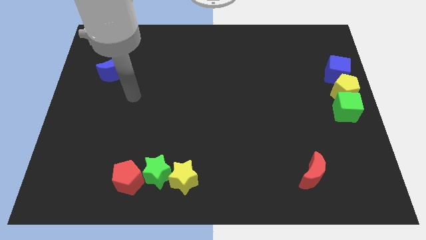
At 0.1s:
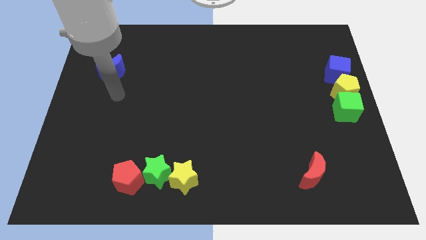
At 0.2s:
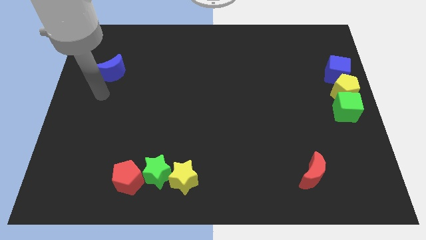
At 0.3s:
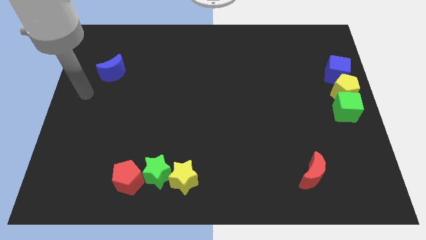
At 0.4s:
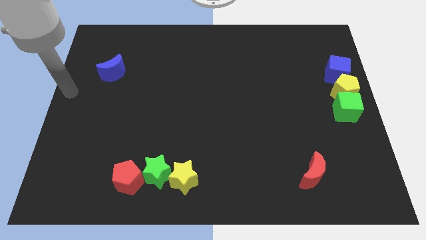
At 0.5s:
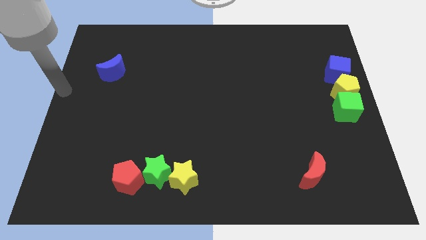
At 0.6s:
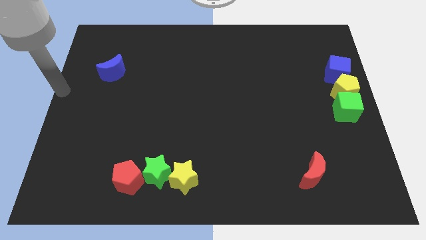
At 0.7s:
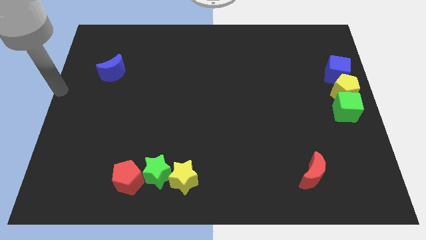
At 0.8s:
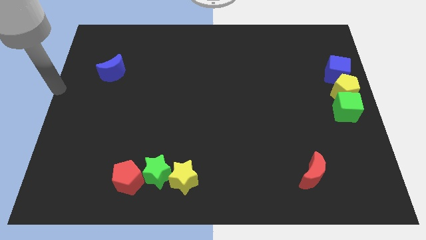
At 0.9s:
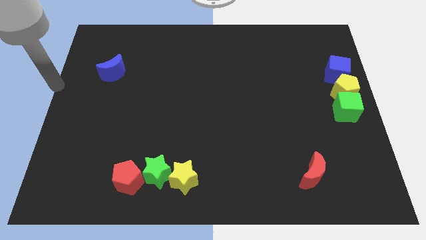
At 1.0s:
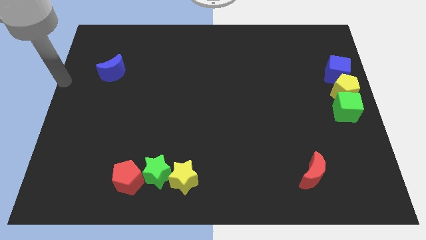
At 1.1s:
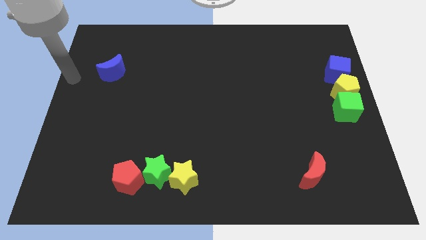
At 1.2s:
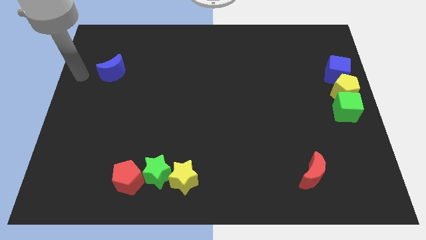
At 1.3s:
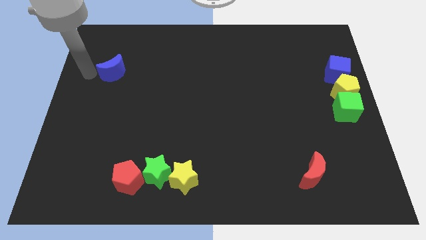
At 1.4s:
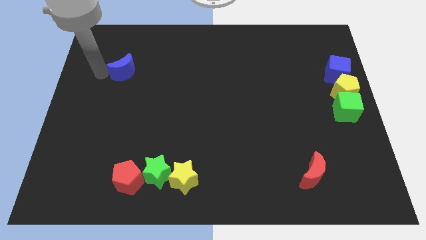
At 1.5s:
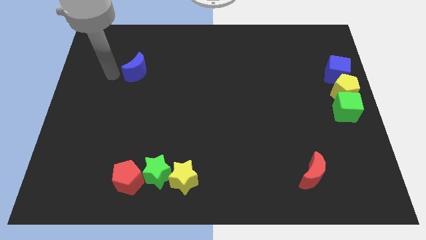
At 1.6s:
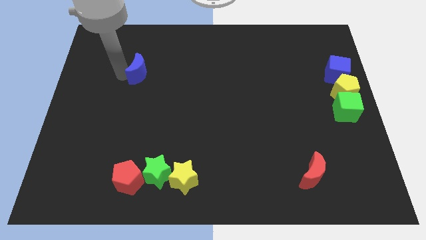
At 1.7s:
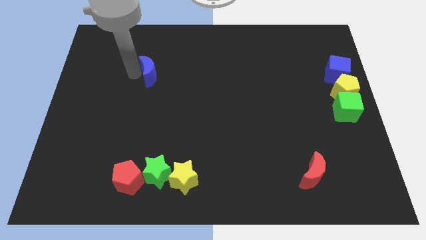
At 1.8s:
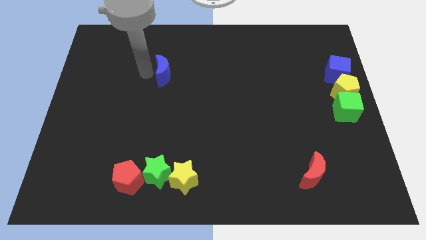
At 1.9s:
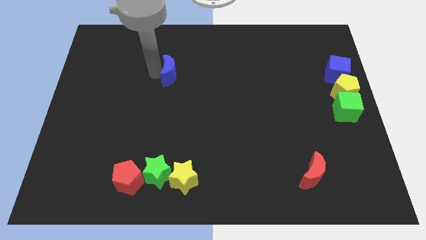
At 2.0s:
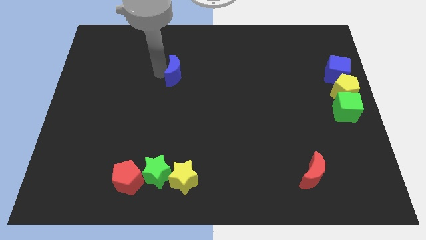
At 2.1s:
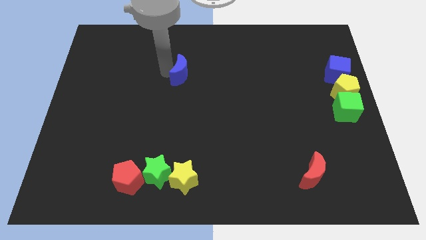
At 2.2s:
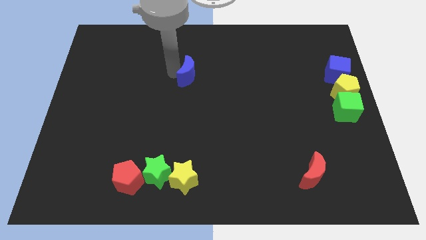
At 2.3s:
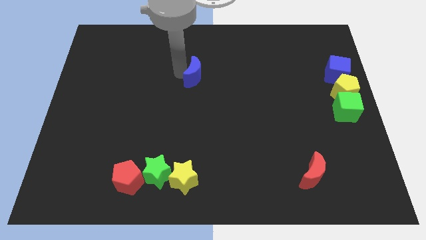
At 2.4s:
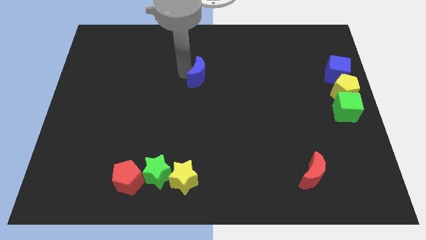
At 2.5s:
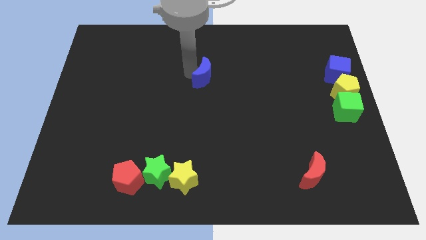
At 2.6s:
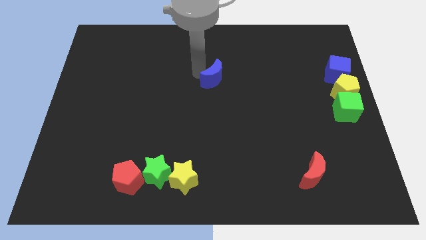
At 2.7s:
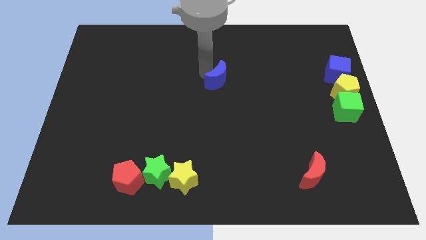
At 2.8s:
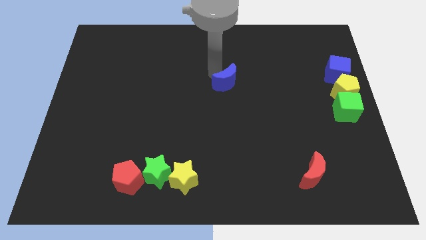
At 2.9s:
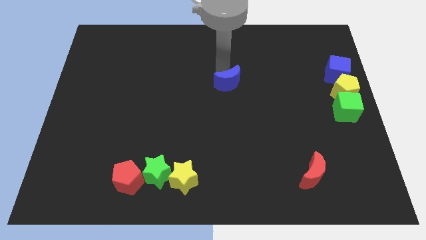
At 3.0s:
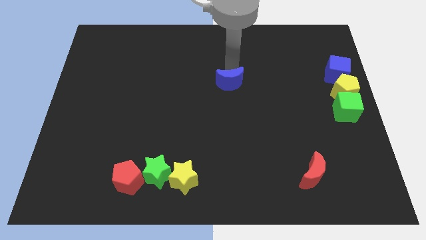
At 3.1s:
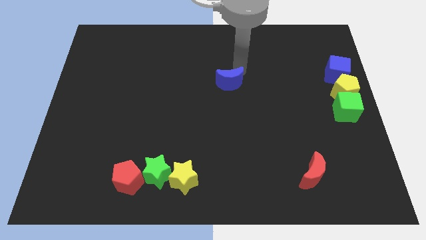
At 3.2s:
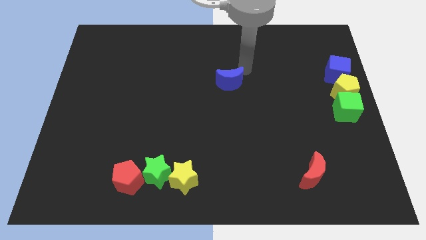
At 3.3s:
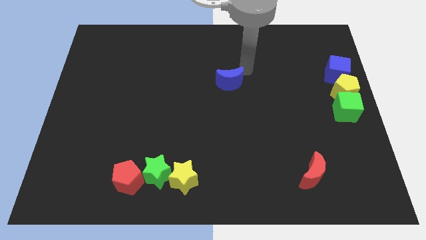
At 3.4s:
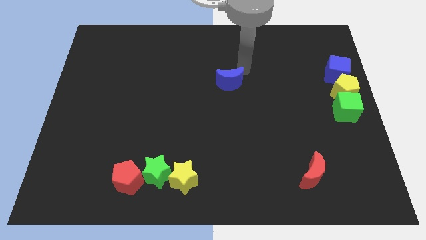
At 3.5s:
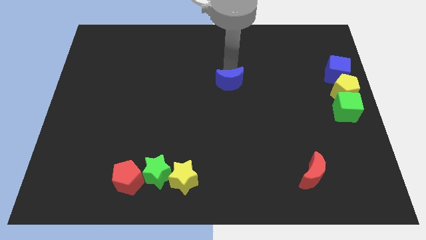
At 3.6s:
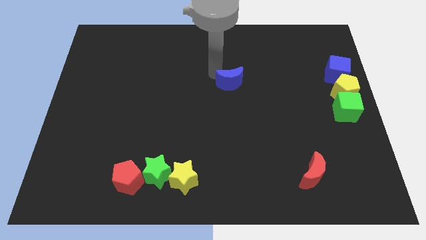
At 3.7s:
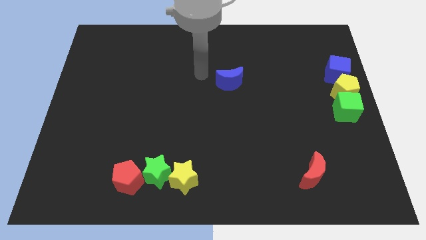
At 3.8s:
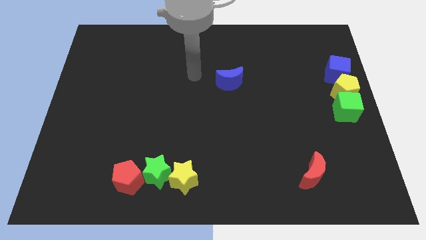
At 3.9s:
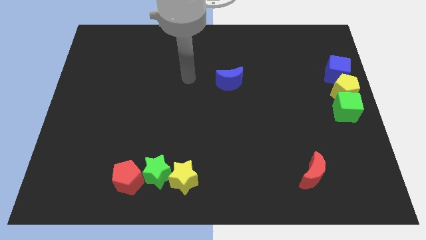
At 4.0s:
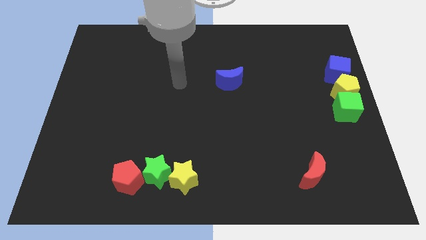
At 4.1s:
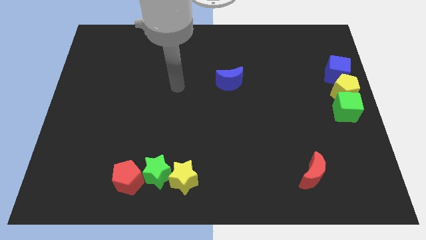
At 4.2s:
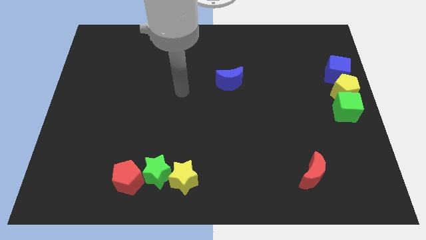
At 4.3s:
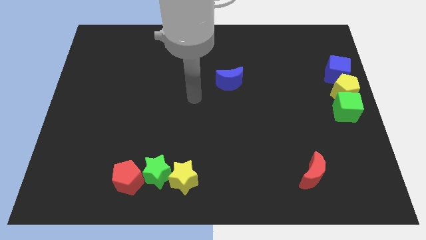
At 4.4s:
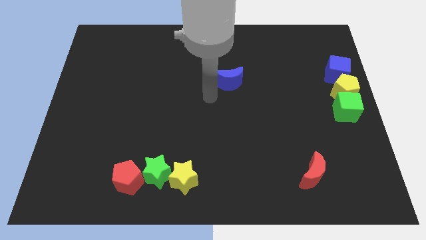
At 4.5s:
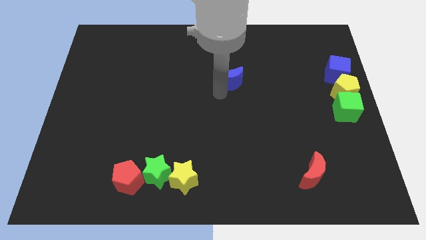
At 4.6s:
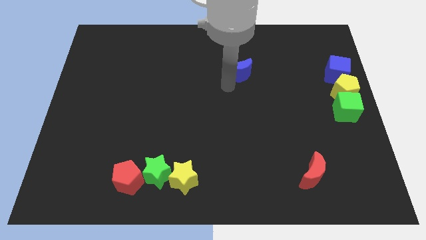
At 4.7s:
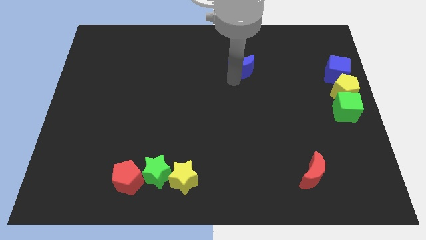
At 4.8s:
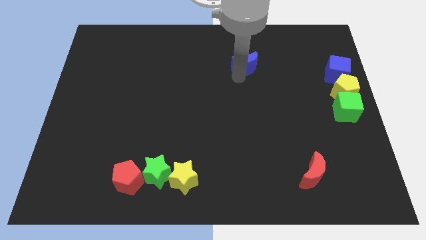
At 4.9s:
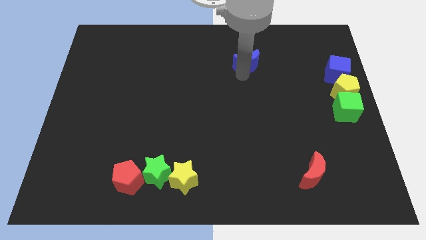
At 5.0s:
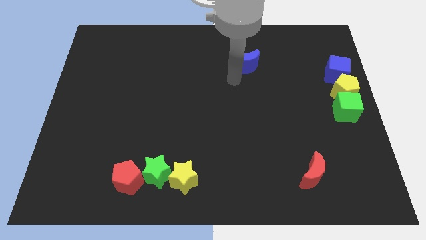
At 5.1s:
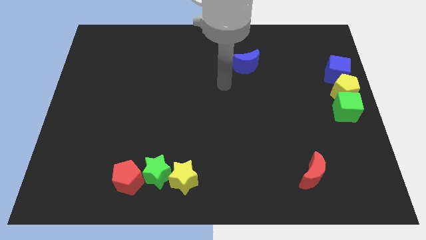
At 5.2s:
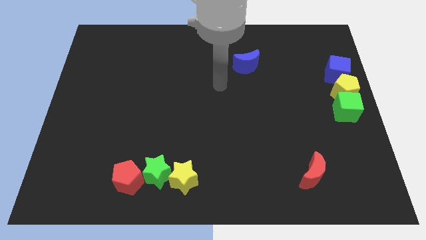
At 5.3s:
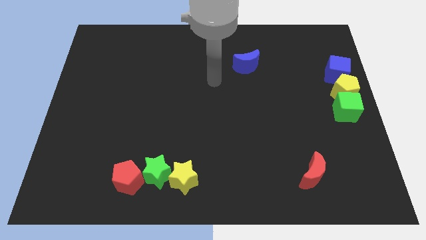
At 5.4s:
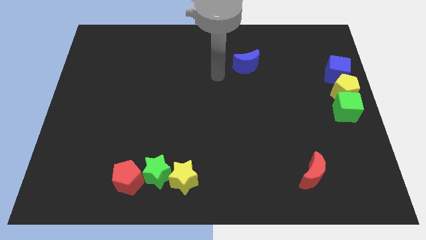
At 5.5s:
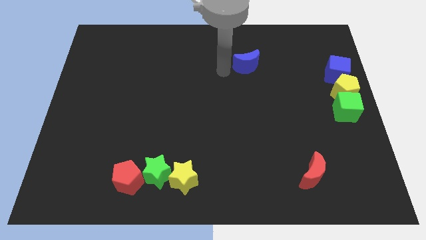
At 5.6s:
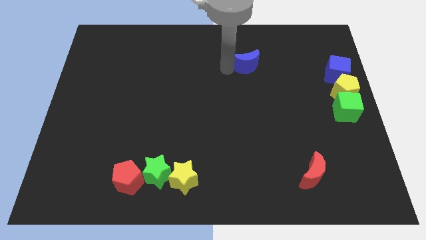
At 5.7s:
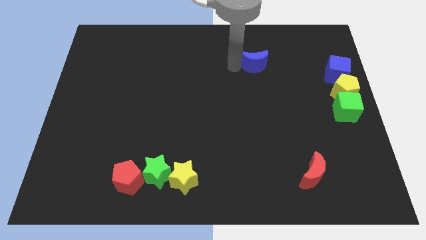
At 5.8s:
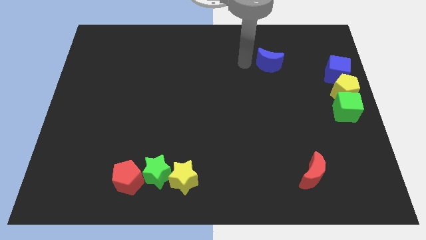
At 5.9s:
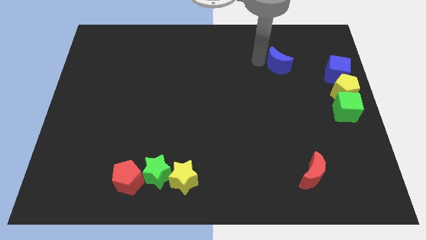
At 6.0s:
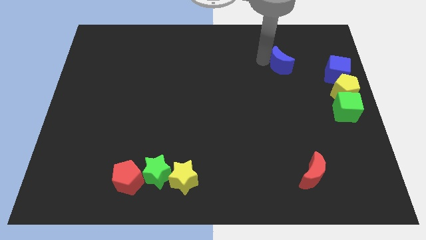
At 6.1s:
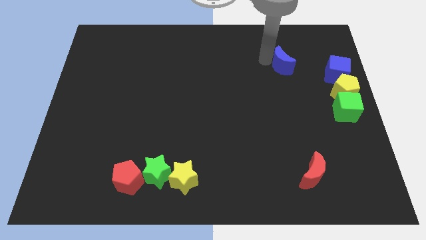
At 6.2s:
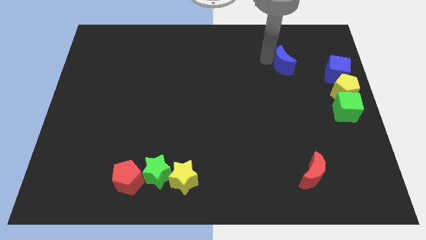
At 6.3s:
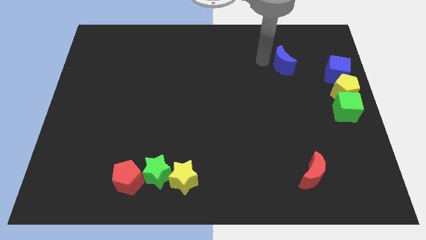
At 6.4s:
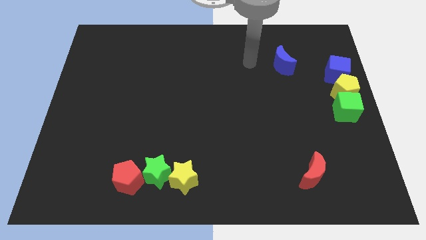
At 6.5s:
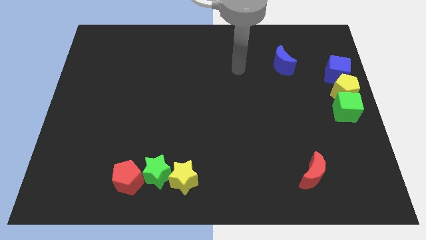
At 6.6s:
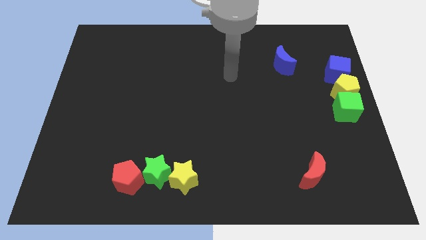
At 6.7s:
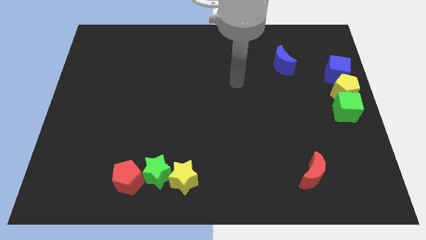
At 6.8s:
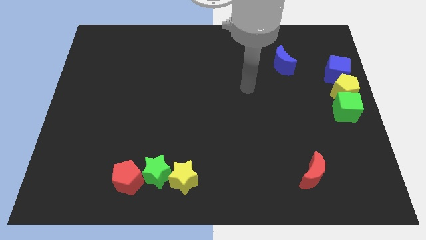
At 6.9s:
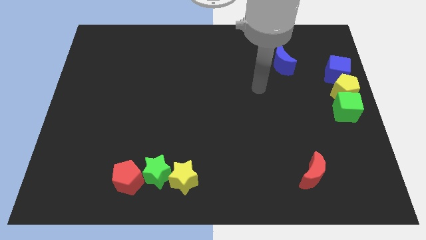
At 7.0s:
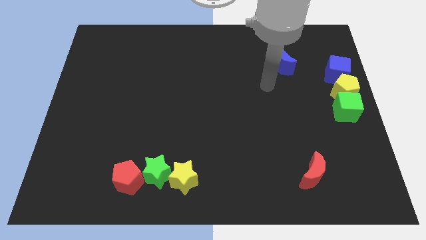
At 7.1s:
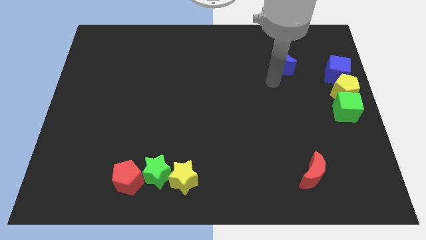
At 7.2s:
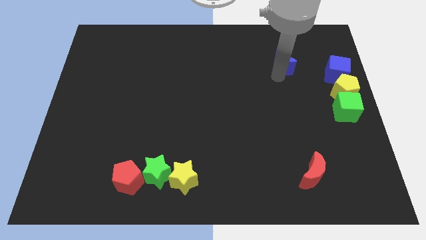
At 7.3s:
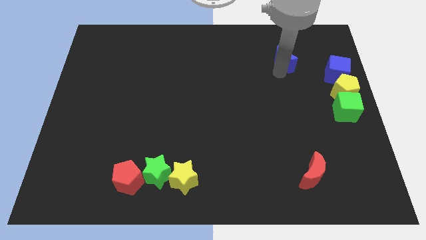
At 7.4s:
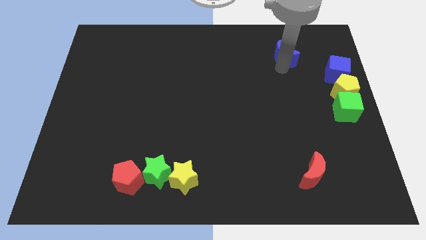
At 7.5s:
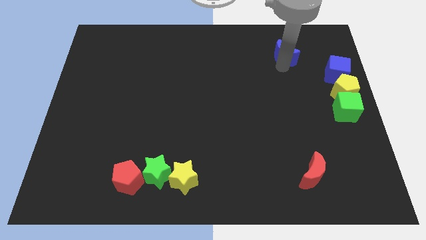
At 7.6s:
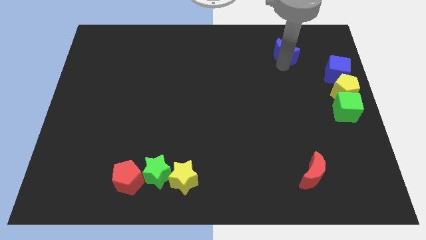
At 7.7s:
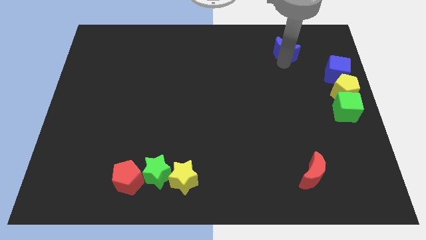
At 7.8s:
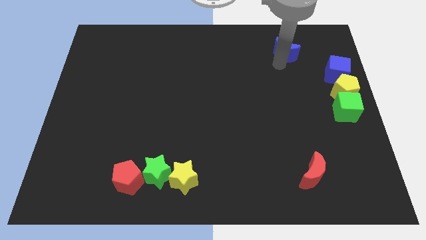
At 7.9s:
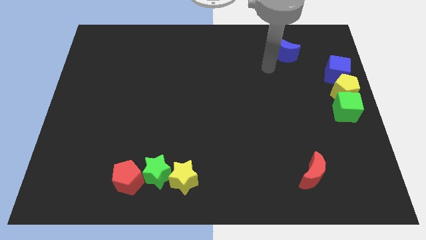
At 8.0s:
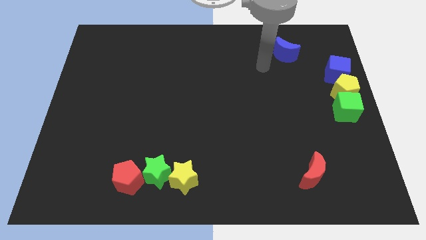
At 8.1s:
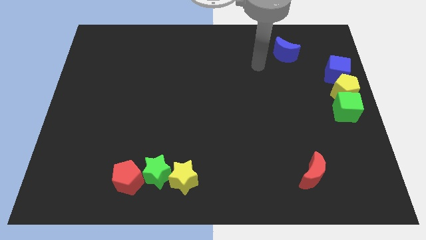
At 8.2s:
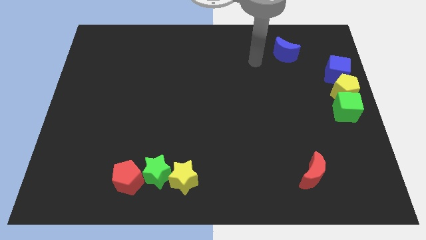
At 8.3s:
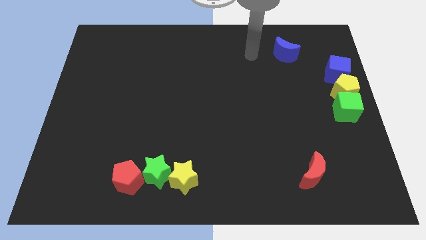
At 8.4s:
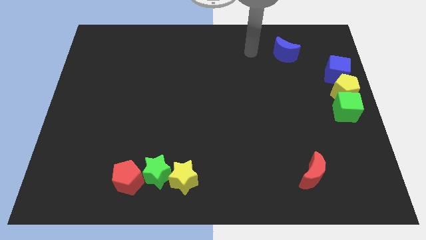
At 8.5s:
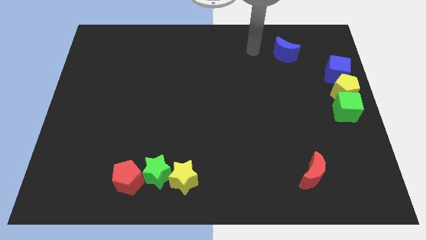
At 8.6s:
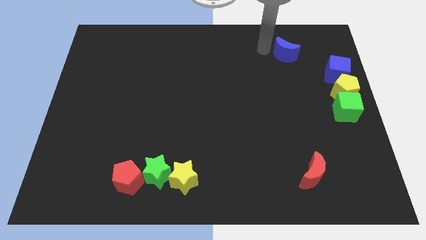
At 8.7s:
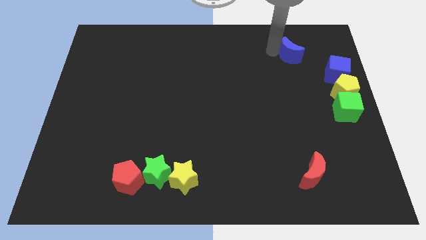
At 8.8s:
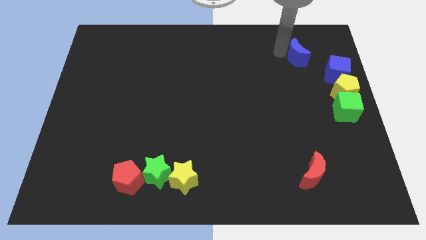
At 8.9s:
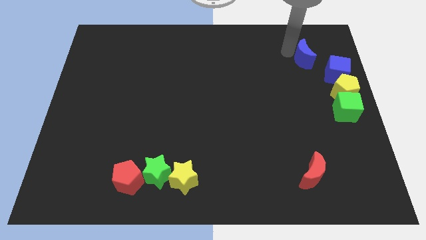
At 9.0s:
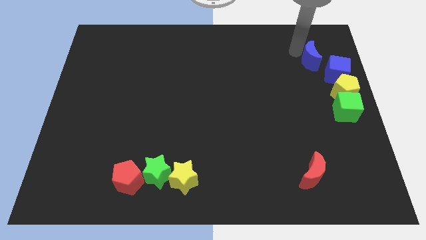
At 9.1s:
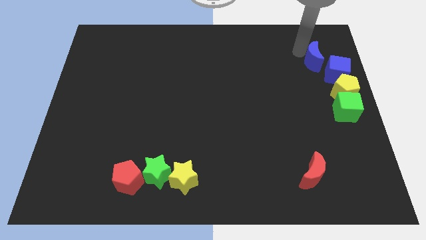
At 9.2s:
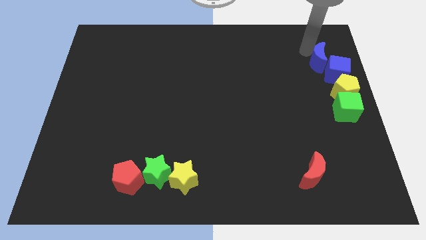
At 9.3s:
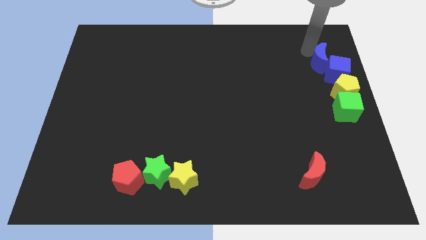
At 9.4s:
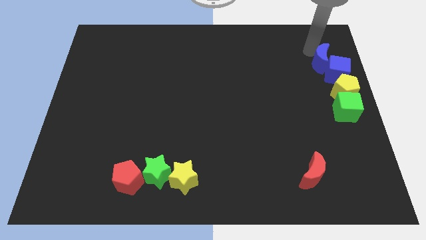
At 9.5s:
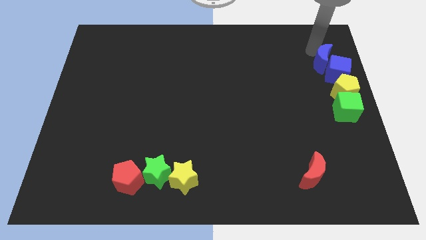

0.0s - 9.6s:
place the blue crescent near the blue cube
